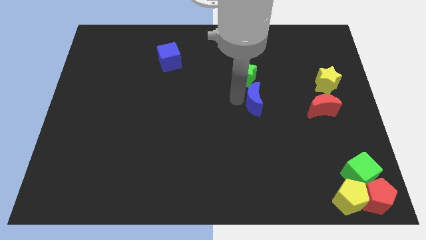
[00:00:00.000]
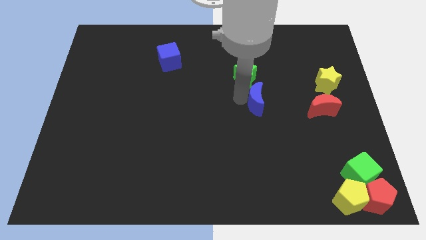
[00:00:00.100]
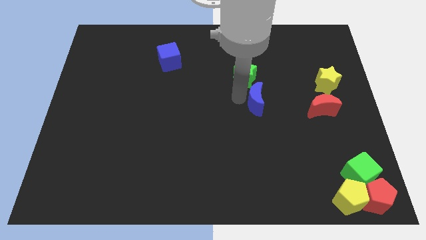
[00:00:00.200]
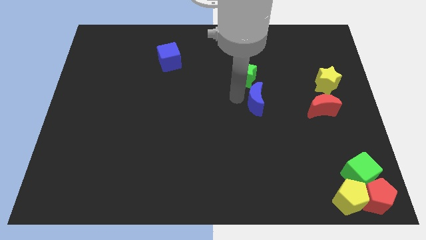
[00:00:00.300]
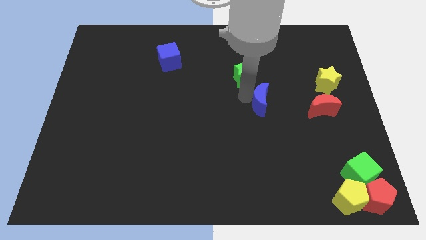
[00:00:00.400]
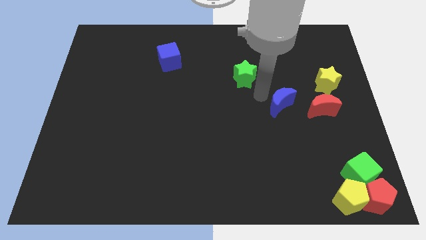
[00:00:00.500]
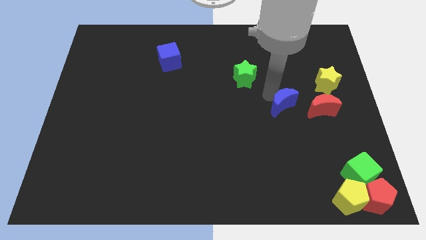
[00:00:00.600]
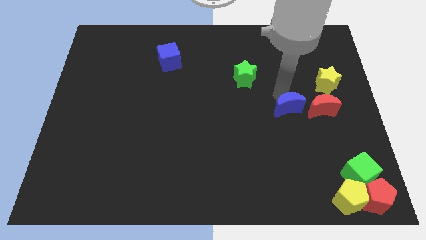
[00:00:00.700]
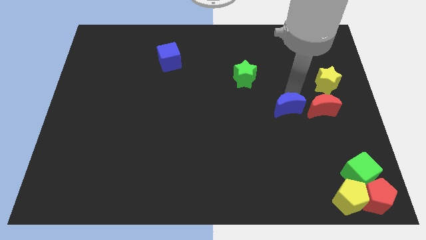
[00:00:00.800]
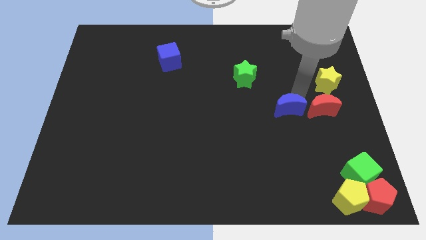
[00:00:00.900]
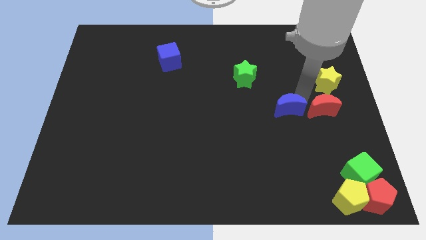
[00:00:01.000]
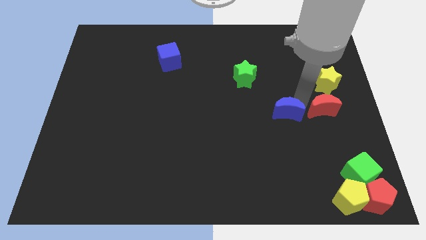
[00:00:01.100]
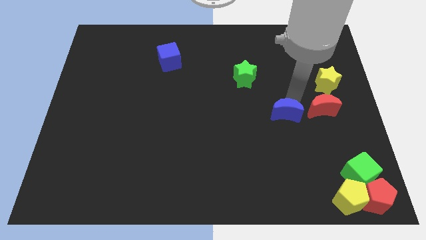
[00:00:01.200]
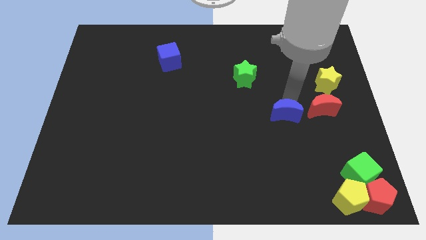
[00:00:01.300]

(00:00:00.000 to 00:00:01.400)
place blue moon to the left of red moon

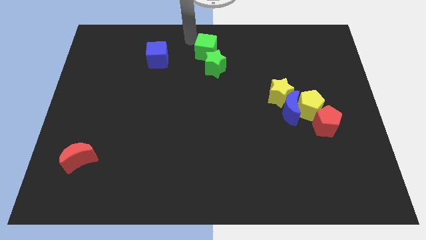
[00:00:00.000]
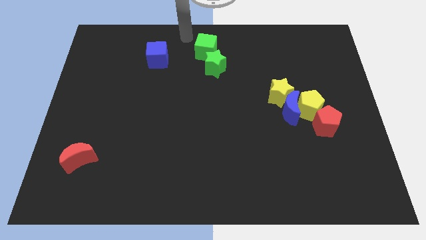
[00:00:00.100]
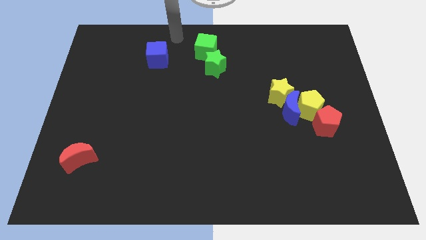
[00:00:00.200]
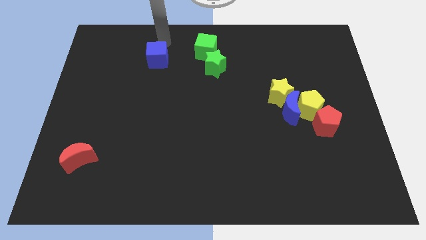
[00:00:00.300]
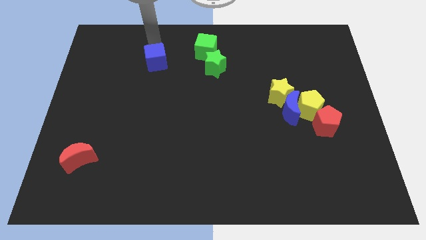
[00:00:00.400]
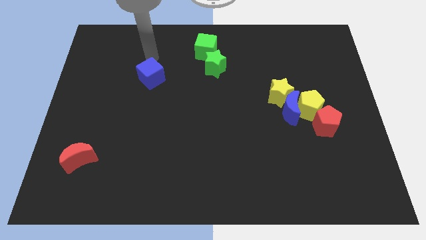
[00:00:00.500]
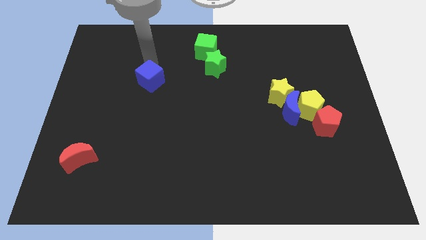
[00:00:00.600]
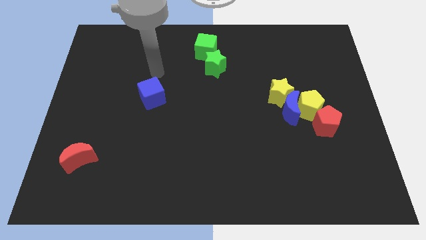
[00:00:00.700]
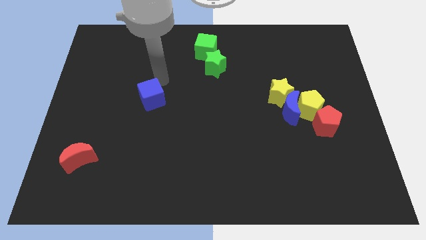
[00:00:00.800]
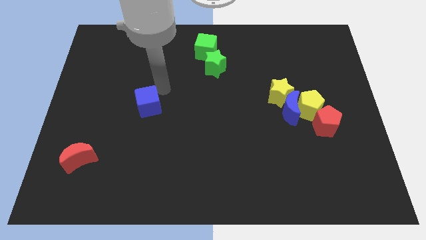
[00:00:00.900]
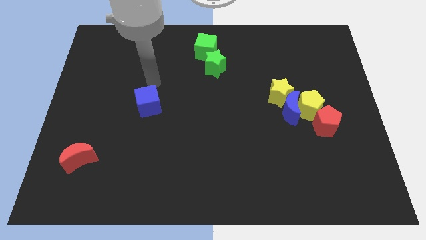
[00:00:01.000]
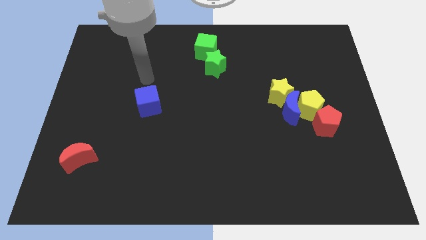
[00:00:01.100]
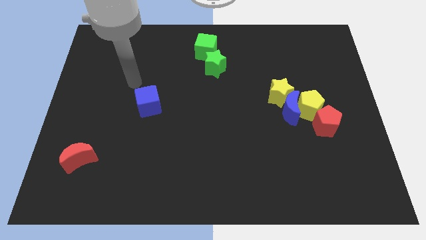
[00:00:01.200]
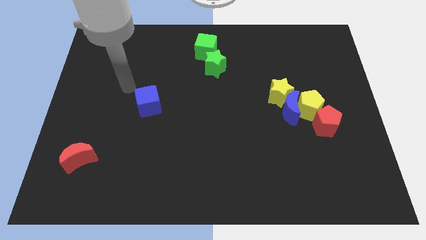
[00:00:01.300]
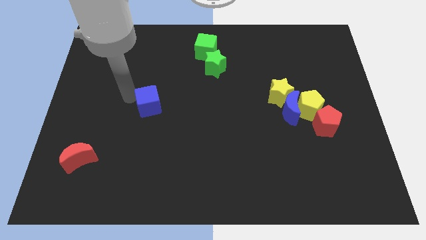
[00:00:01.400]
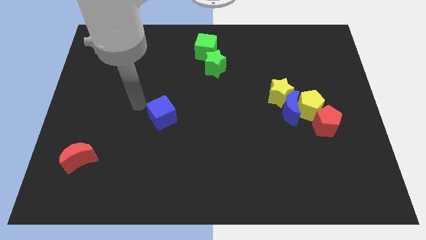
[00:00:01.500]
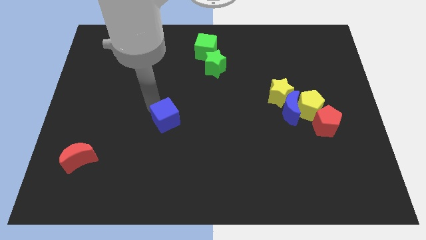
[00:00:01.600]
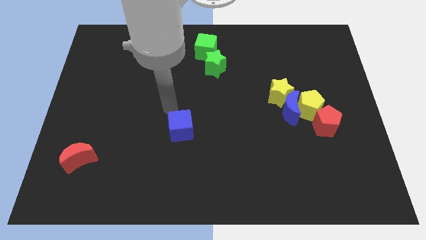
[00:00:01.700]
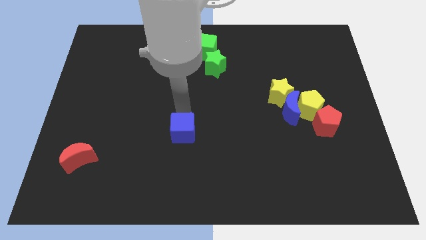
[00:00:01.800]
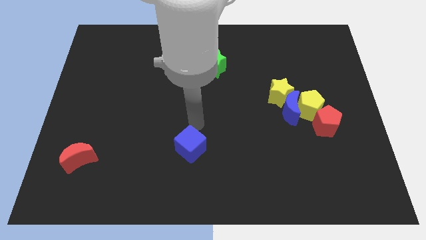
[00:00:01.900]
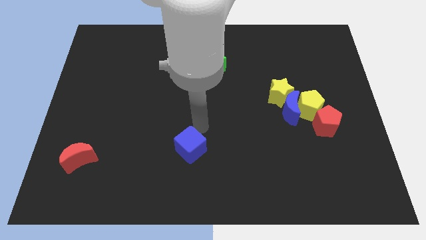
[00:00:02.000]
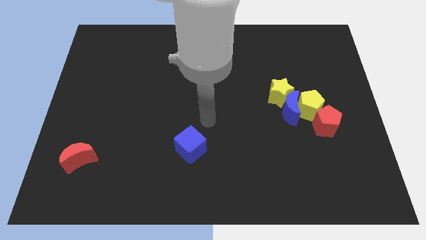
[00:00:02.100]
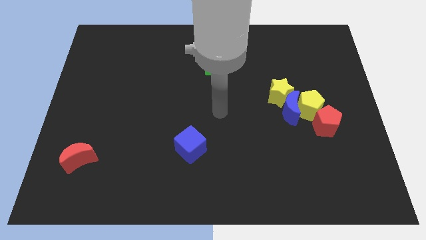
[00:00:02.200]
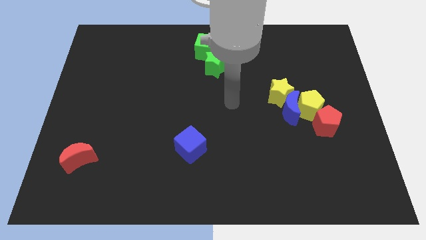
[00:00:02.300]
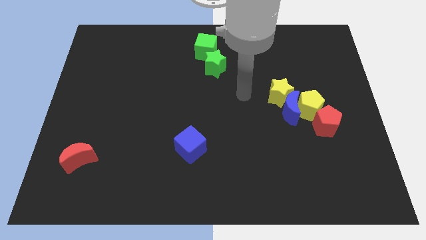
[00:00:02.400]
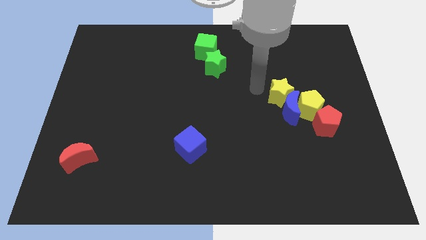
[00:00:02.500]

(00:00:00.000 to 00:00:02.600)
push the blue cube downward

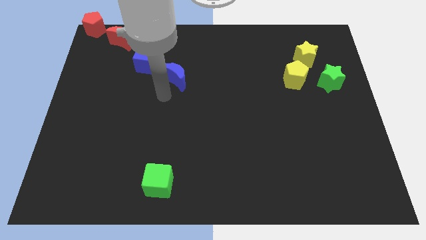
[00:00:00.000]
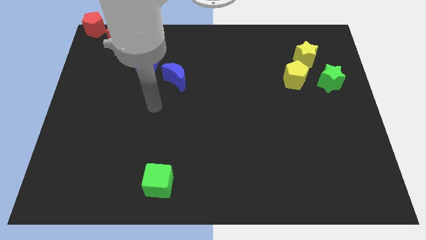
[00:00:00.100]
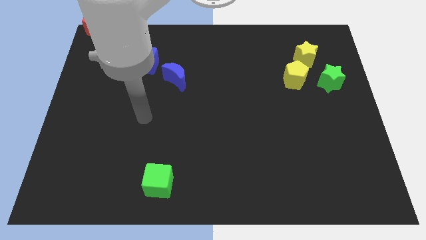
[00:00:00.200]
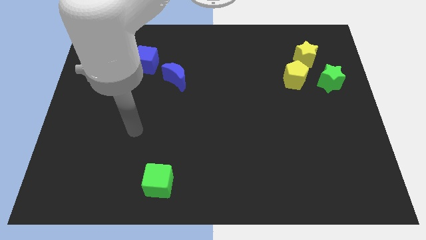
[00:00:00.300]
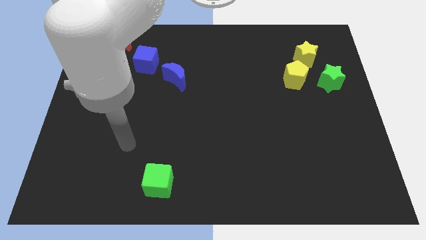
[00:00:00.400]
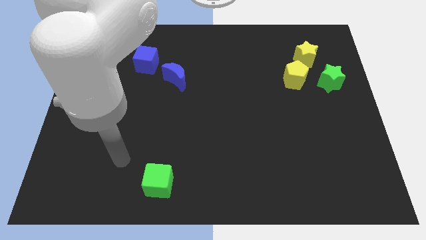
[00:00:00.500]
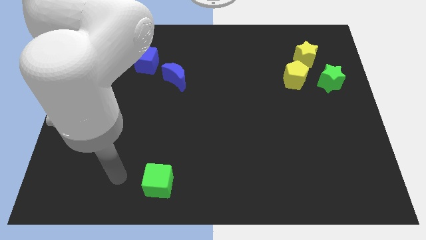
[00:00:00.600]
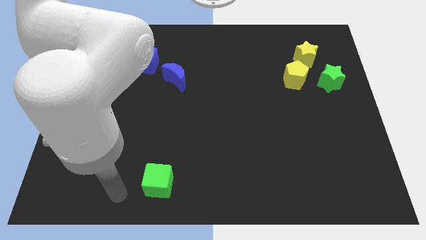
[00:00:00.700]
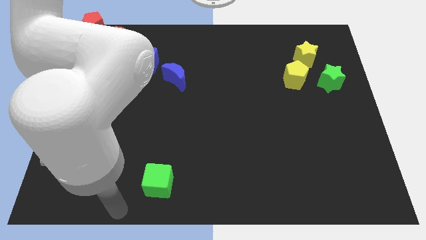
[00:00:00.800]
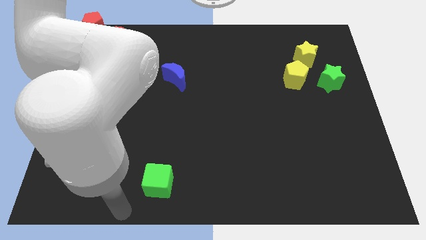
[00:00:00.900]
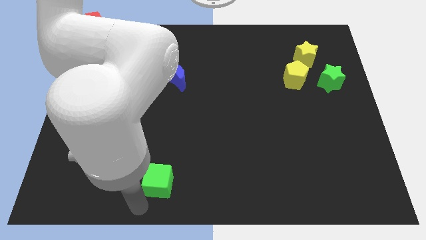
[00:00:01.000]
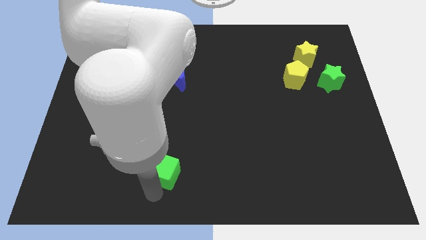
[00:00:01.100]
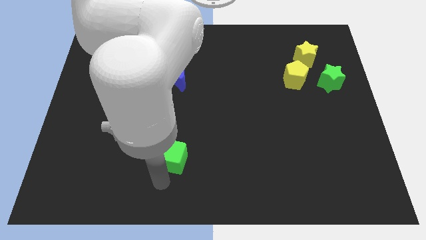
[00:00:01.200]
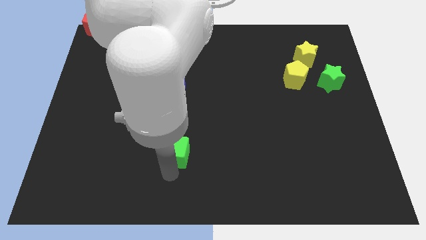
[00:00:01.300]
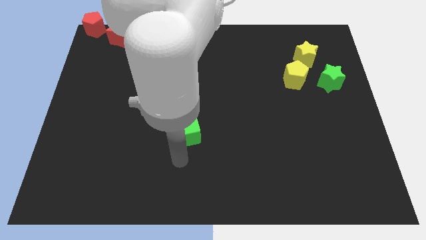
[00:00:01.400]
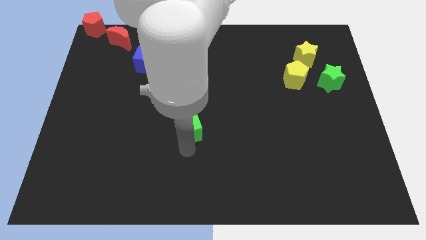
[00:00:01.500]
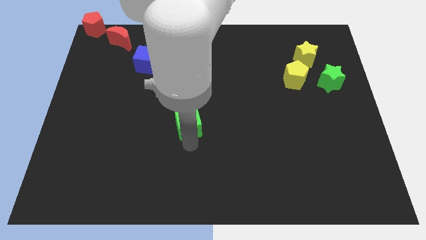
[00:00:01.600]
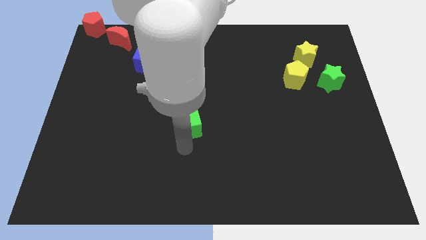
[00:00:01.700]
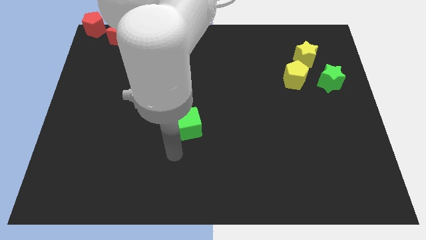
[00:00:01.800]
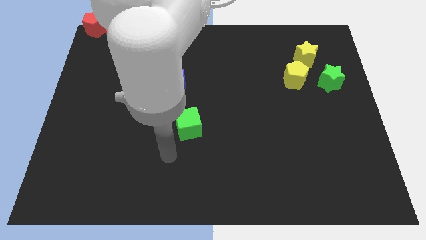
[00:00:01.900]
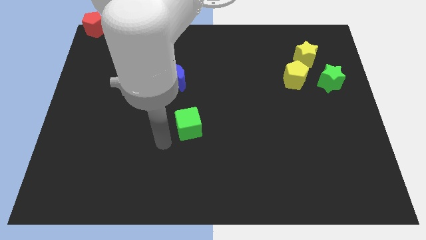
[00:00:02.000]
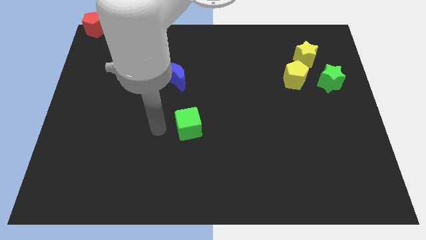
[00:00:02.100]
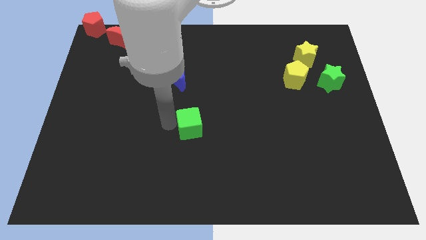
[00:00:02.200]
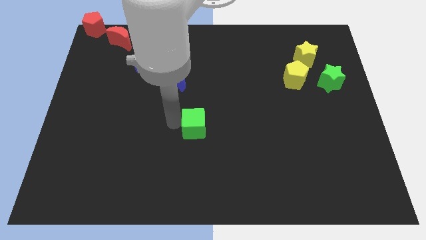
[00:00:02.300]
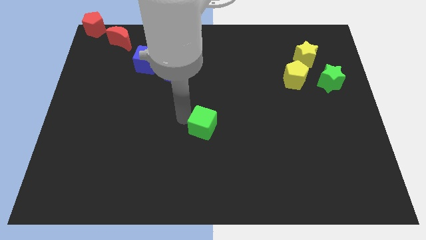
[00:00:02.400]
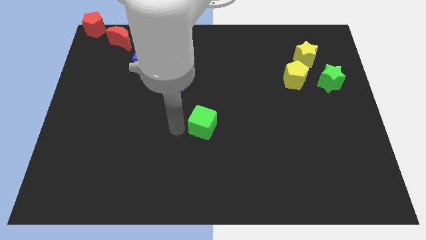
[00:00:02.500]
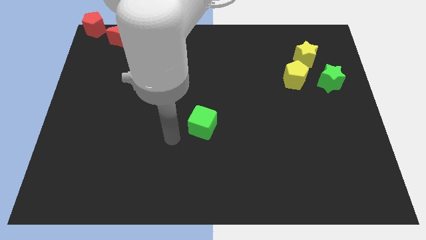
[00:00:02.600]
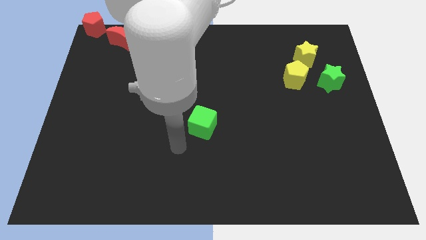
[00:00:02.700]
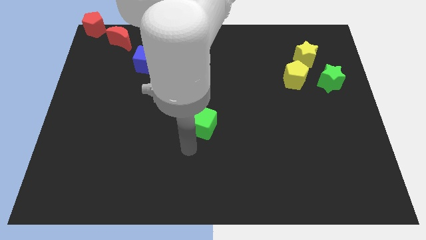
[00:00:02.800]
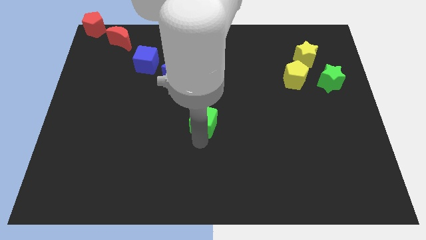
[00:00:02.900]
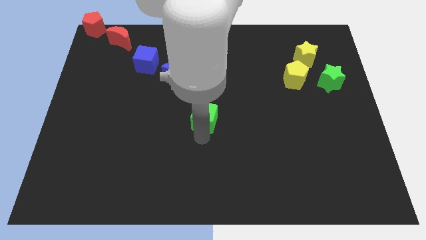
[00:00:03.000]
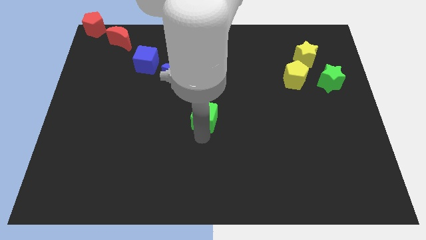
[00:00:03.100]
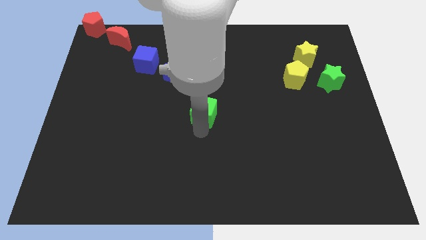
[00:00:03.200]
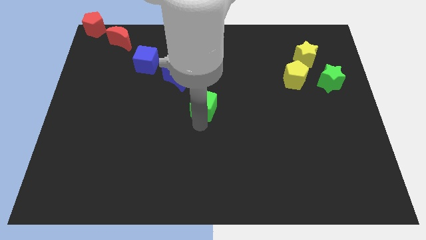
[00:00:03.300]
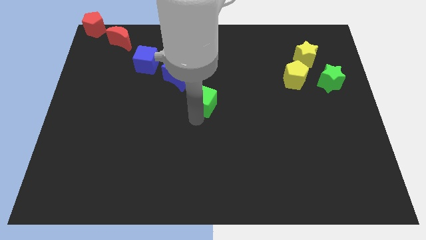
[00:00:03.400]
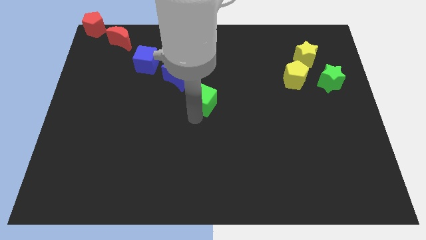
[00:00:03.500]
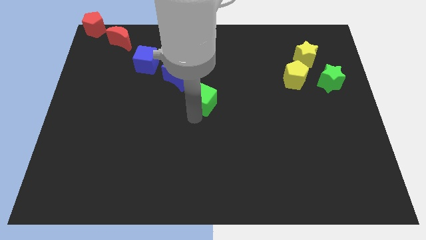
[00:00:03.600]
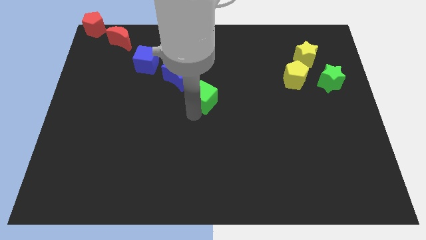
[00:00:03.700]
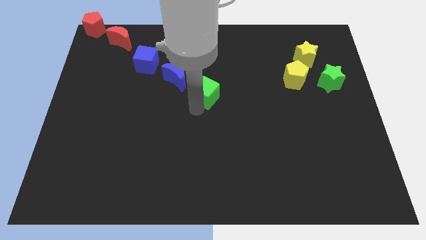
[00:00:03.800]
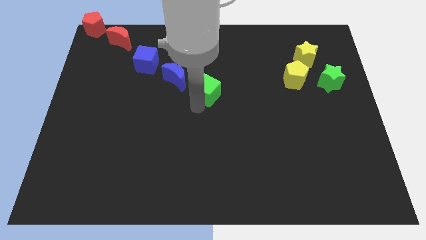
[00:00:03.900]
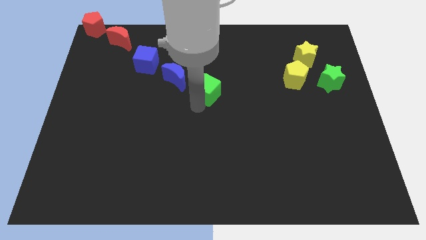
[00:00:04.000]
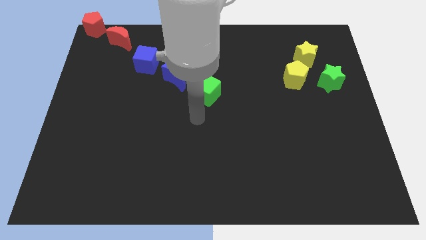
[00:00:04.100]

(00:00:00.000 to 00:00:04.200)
place the green cube beside the blue moon

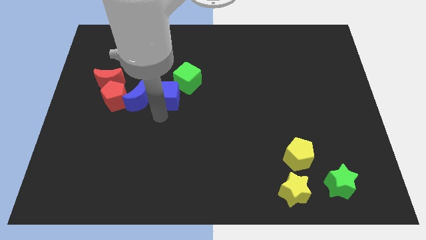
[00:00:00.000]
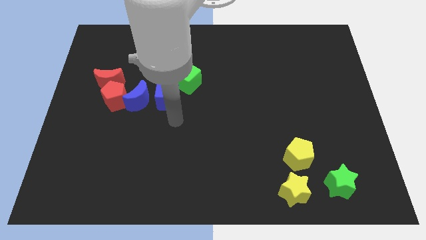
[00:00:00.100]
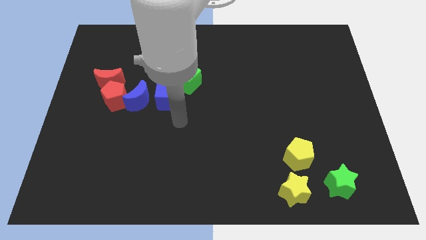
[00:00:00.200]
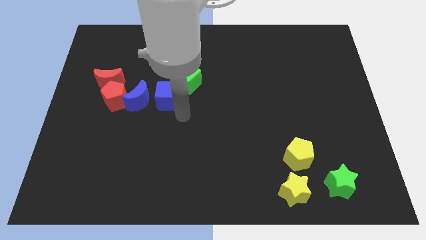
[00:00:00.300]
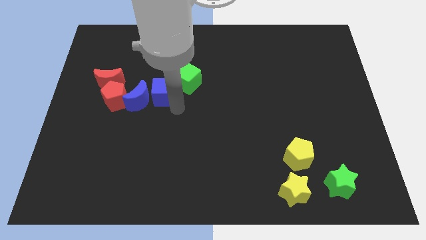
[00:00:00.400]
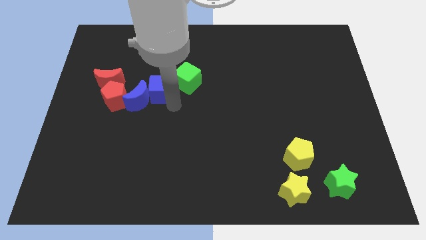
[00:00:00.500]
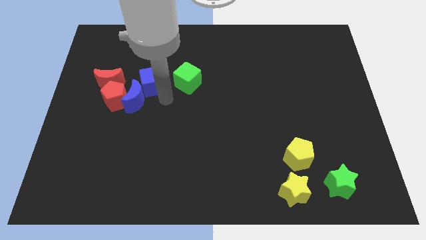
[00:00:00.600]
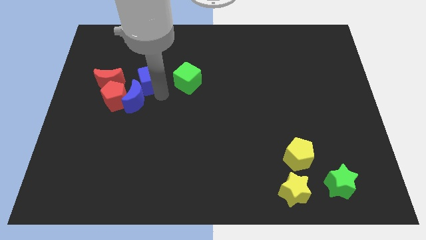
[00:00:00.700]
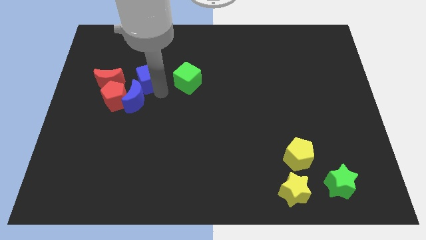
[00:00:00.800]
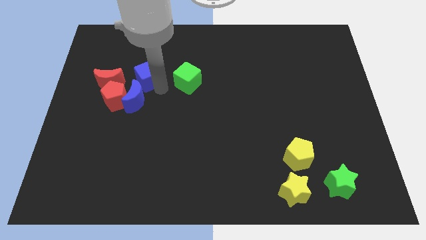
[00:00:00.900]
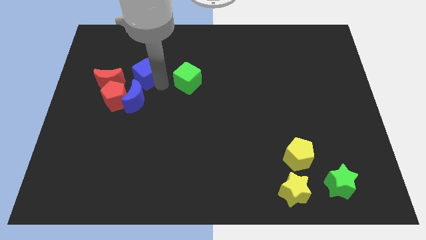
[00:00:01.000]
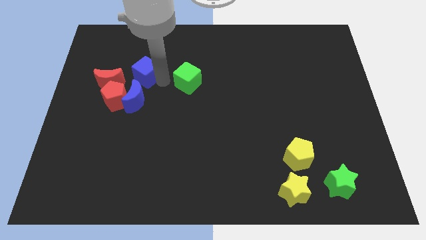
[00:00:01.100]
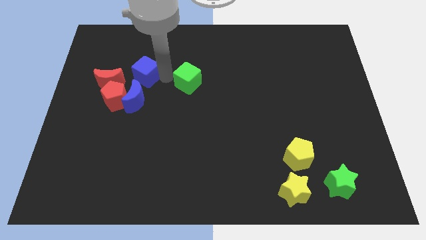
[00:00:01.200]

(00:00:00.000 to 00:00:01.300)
push the blue cube to the top side of the blue moon
